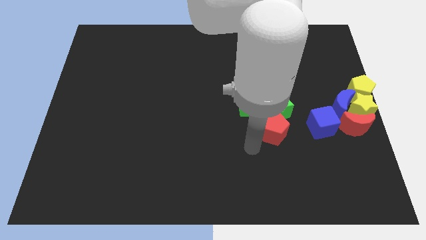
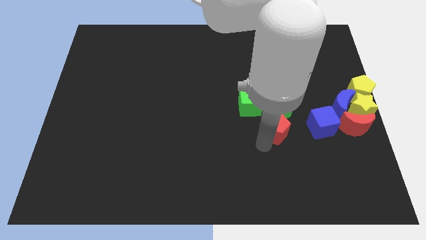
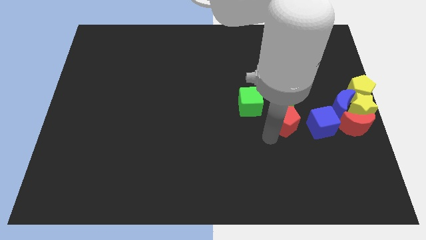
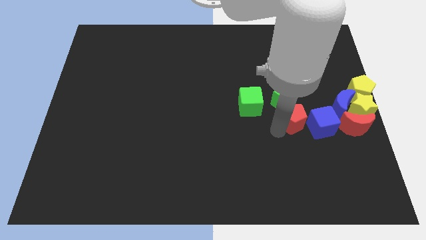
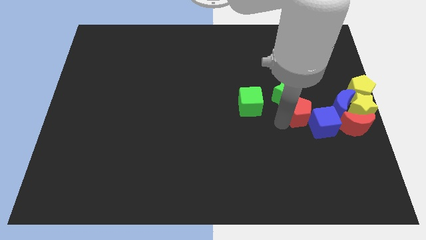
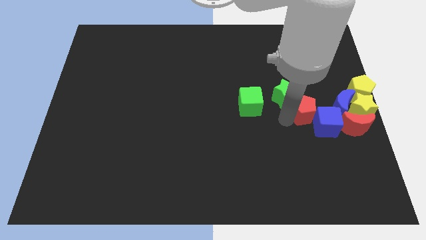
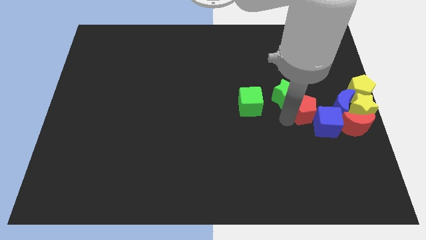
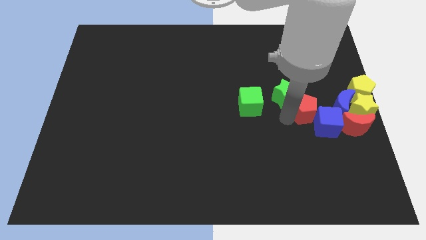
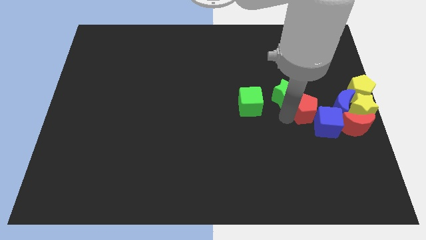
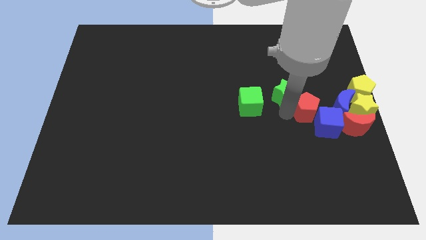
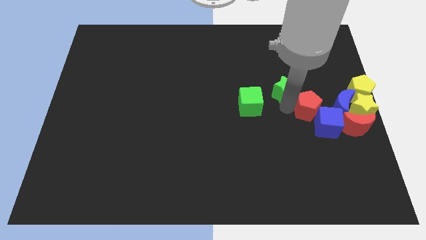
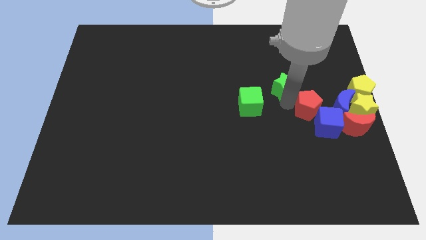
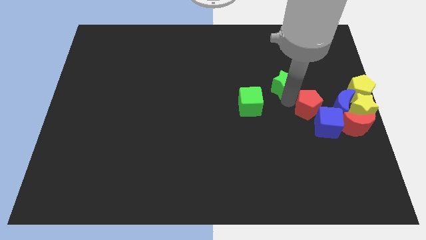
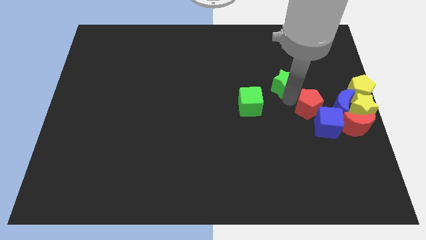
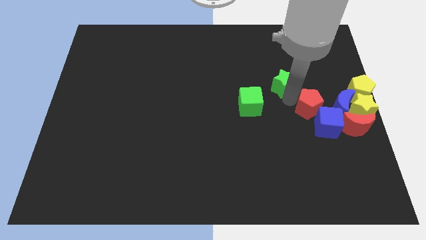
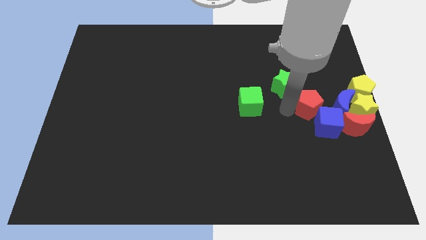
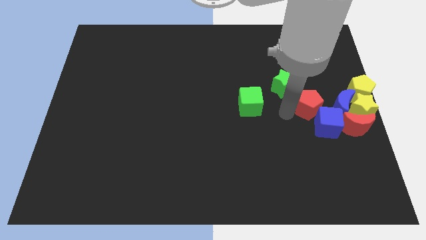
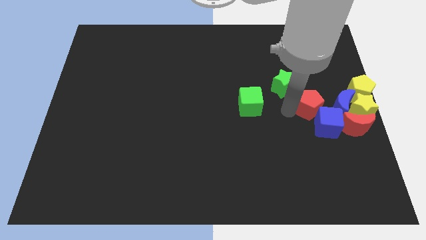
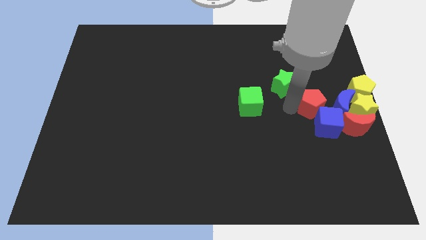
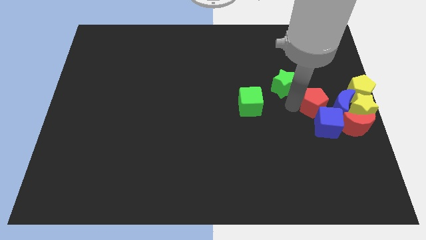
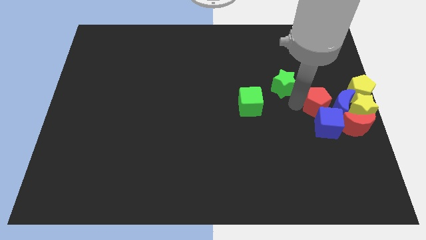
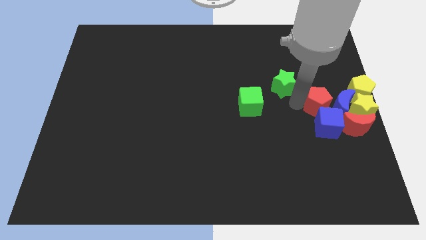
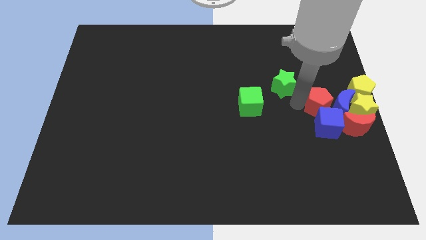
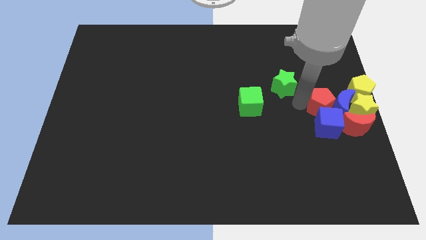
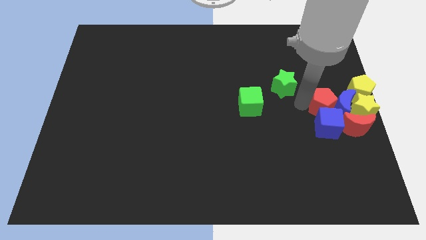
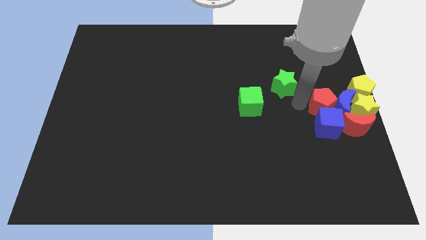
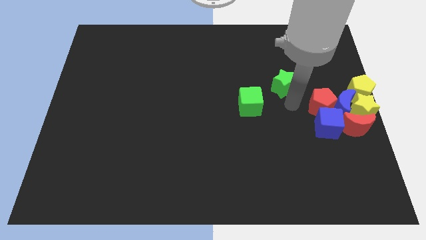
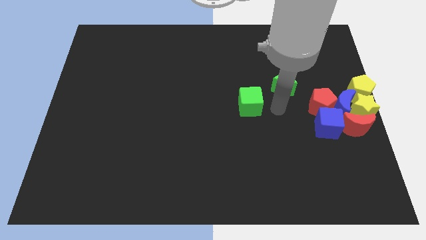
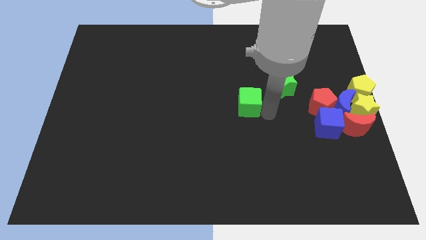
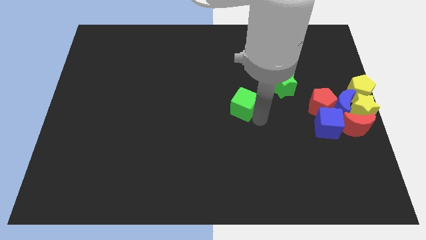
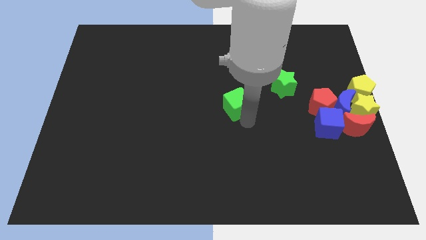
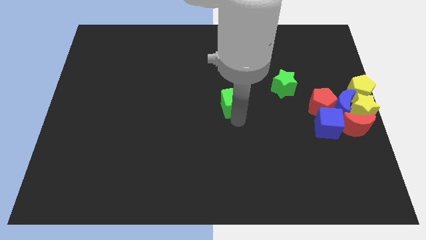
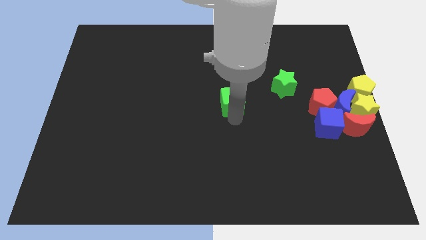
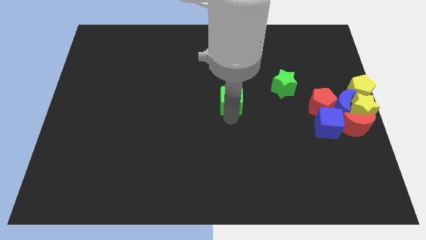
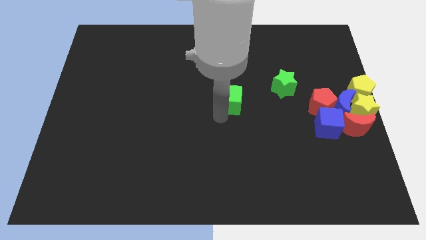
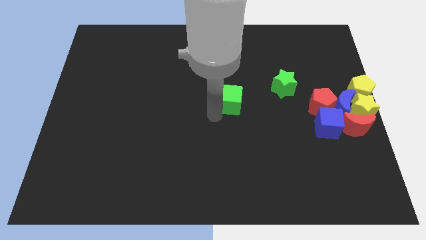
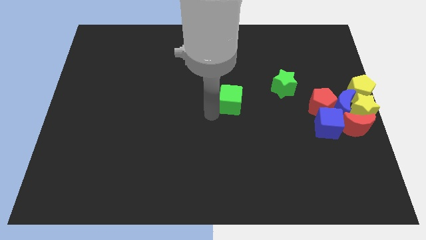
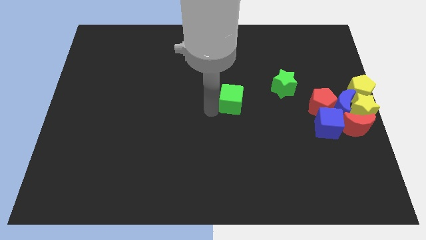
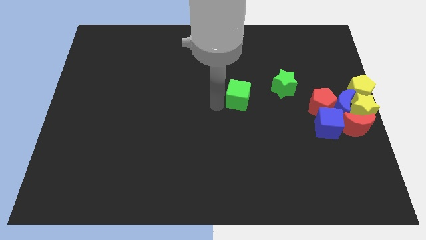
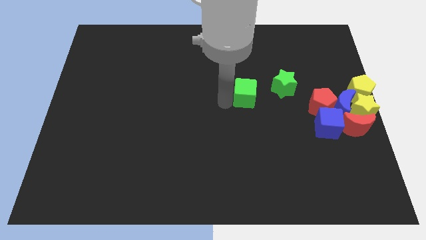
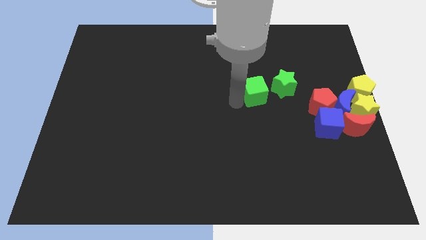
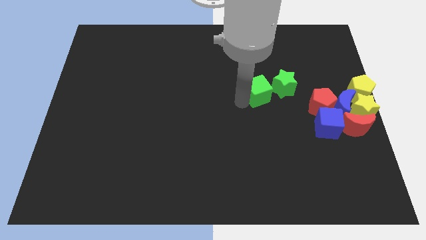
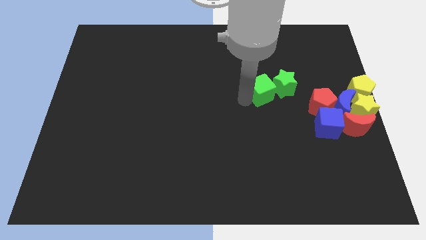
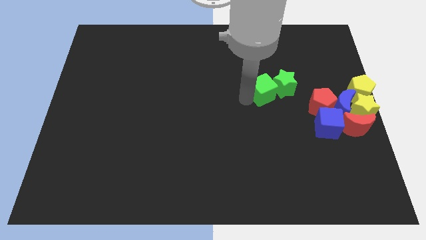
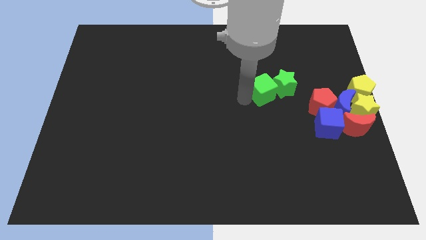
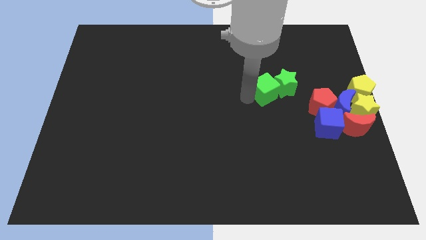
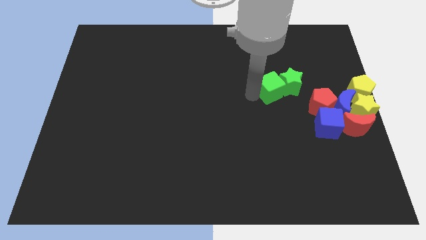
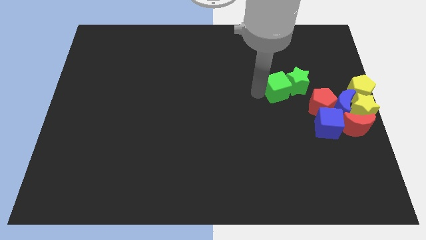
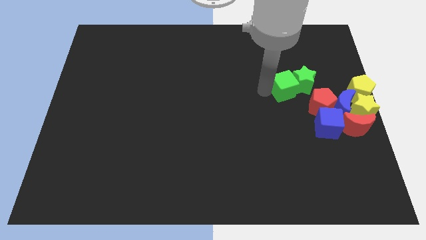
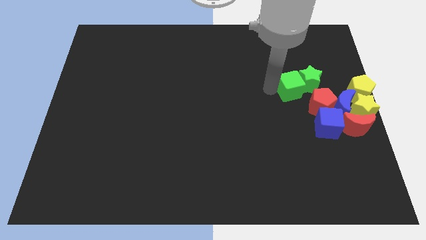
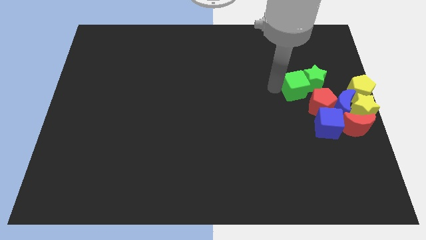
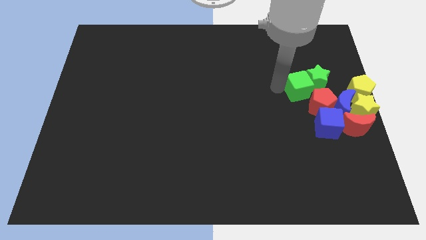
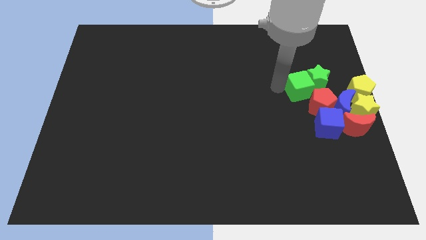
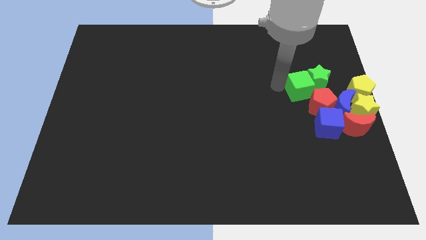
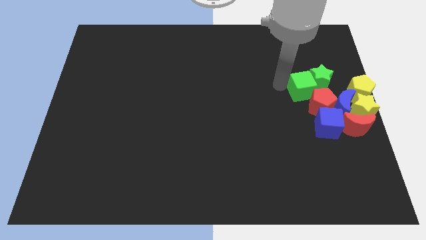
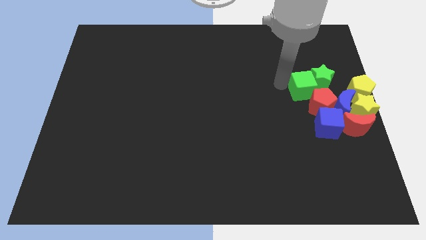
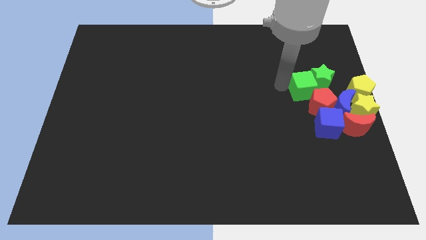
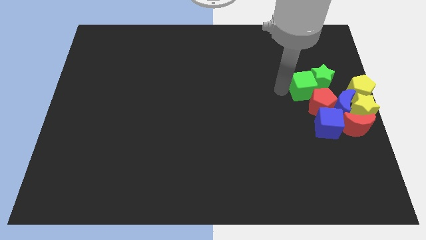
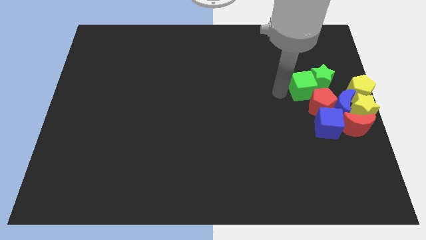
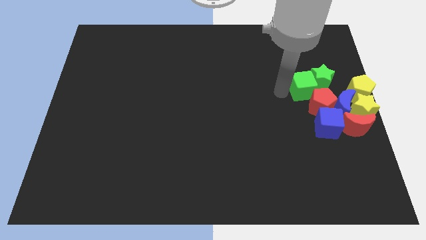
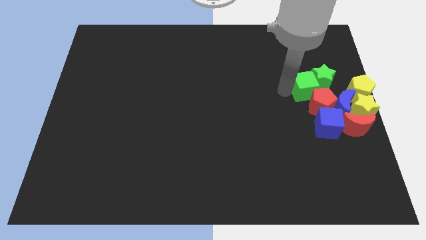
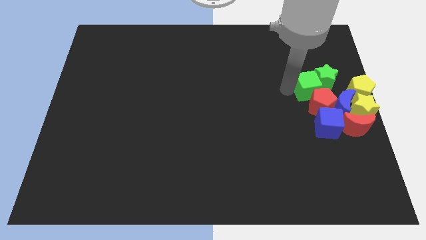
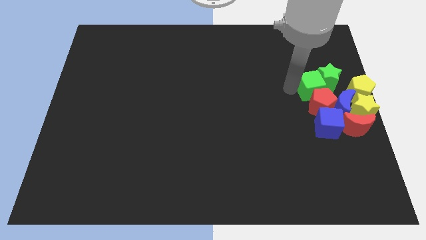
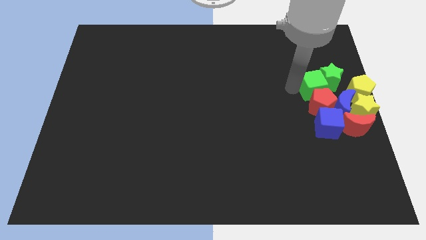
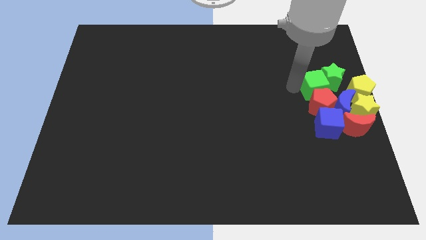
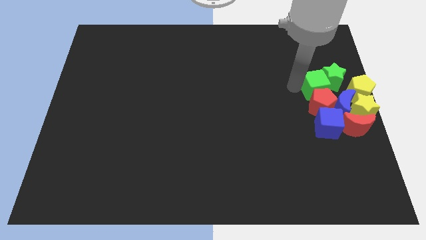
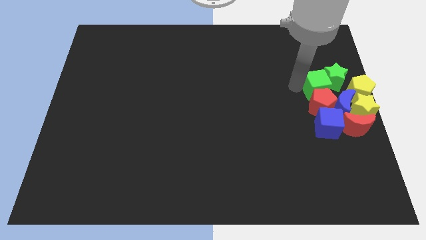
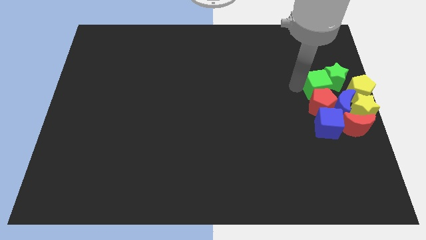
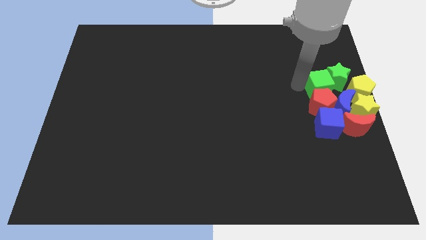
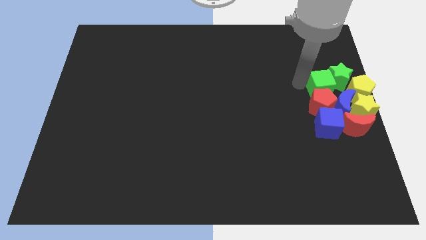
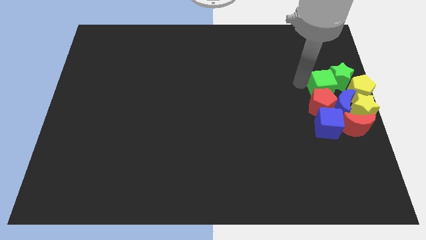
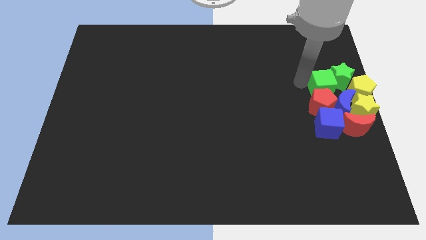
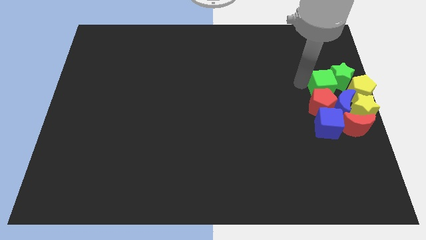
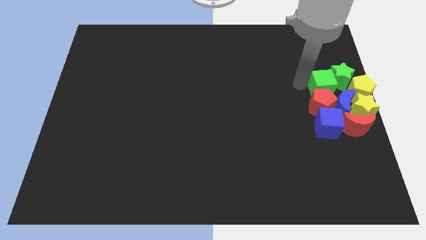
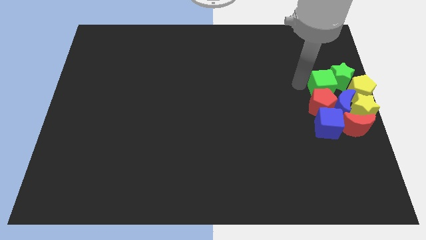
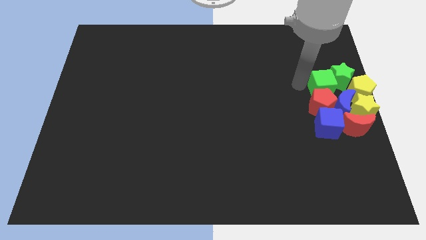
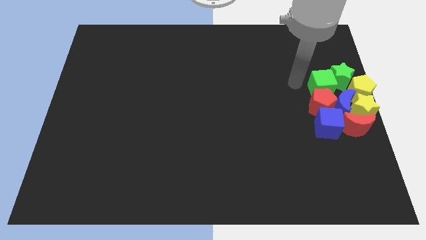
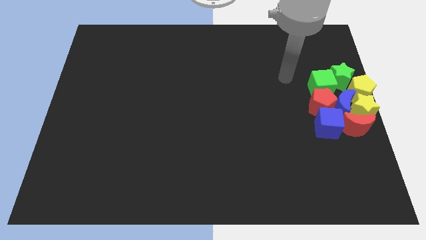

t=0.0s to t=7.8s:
group up all the blocks at the right side of the board

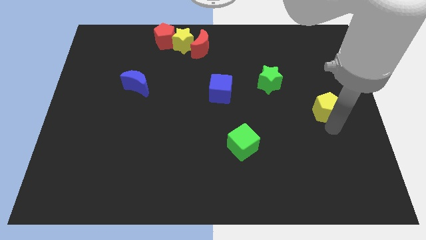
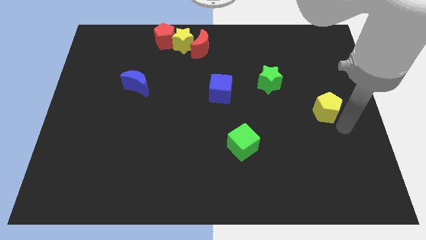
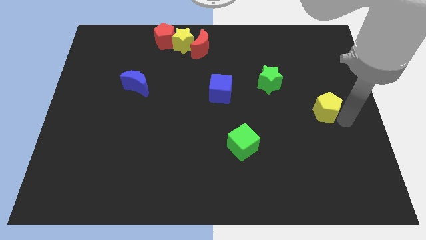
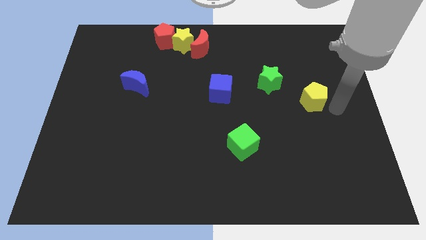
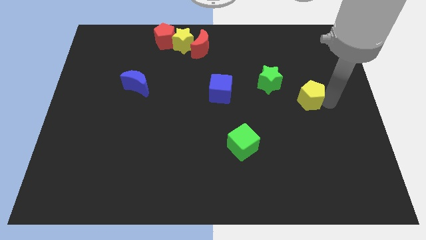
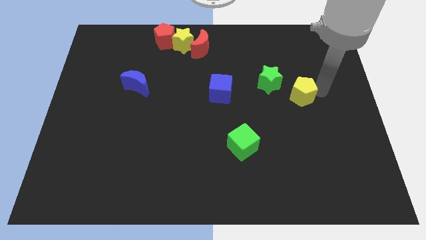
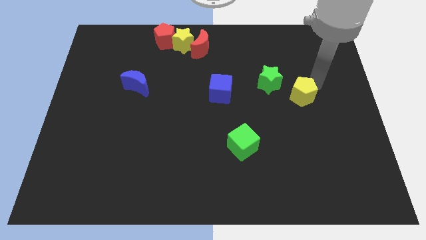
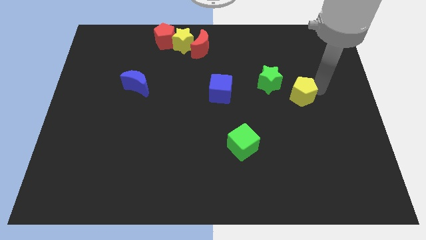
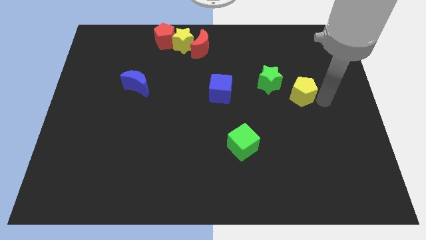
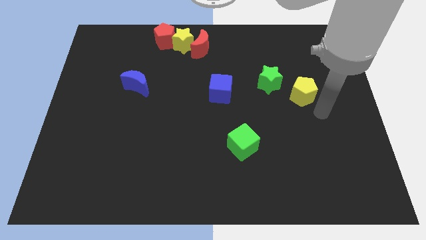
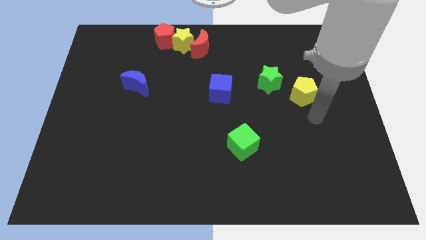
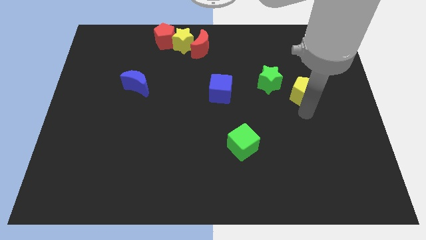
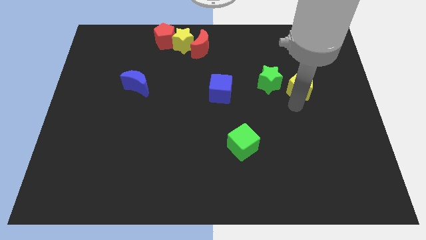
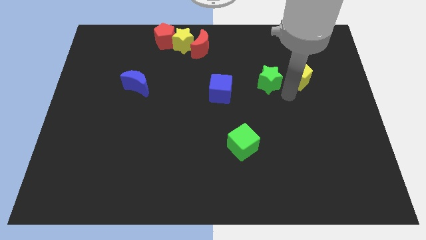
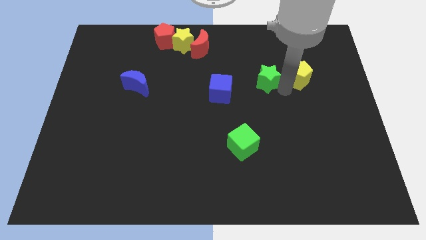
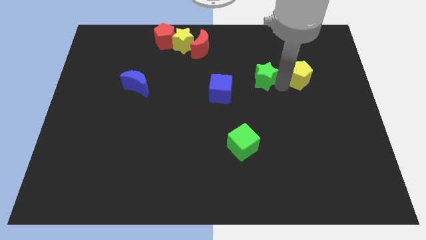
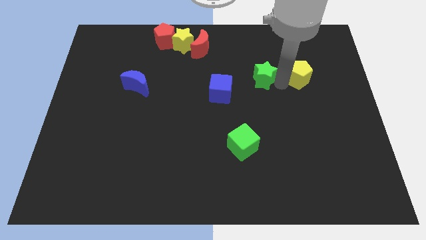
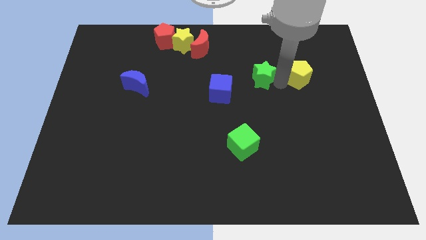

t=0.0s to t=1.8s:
move the yellow pentagon near to the green star
